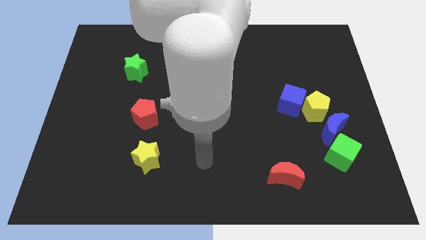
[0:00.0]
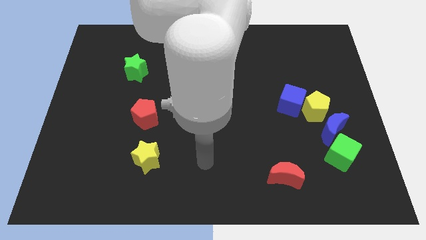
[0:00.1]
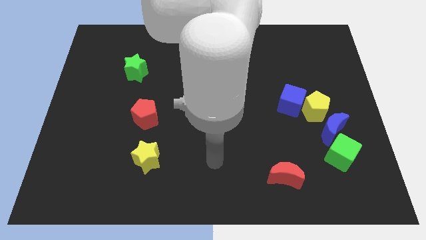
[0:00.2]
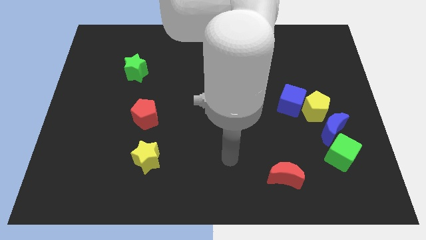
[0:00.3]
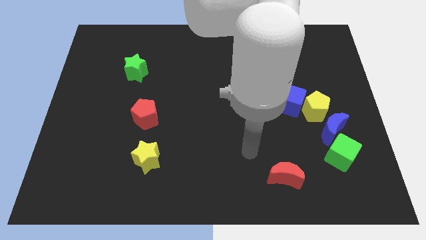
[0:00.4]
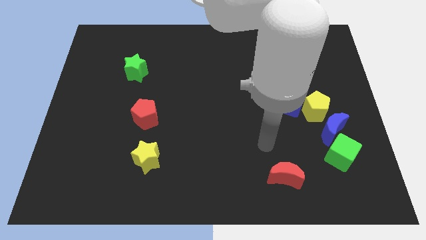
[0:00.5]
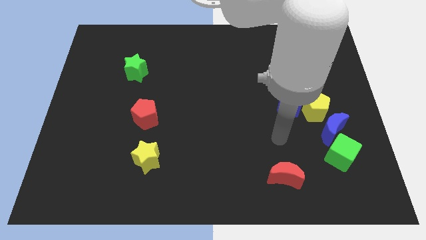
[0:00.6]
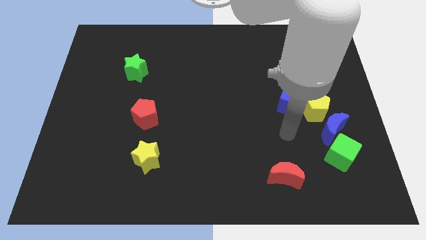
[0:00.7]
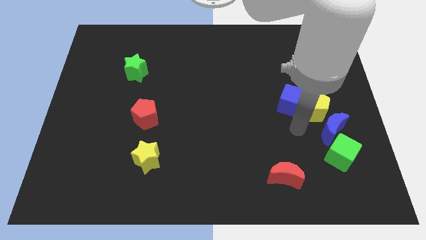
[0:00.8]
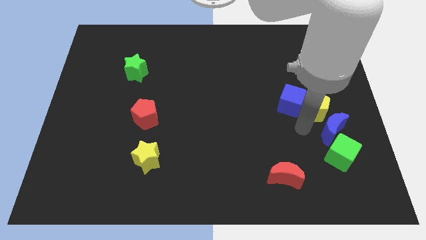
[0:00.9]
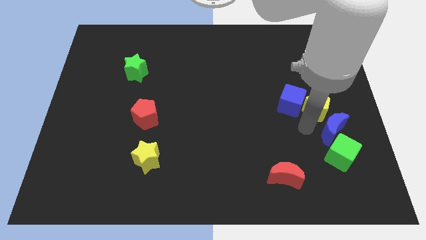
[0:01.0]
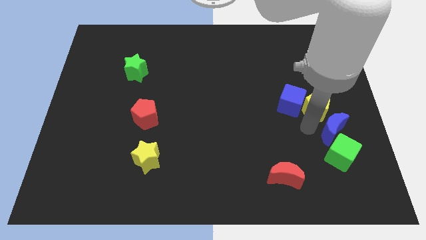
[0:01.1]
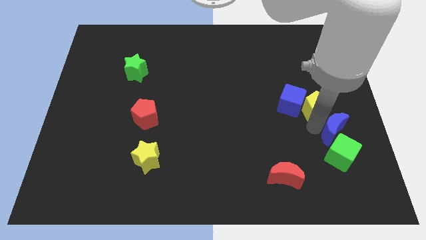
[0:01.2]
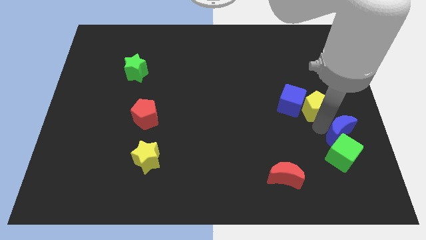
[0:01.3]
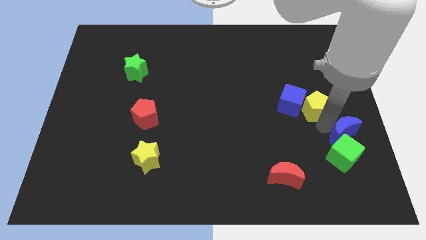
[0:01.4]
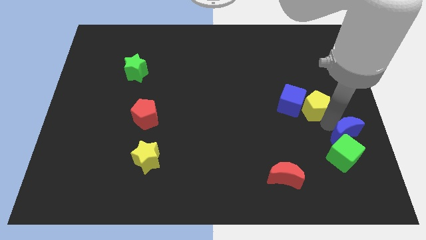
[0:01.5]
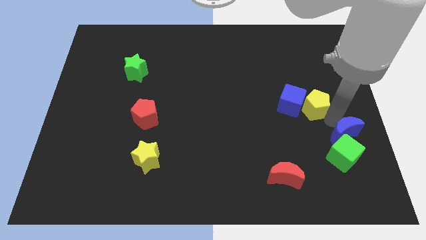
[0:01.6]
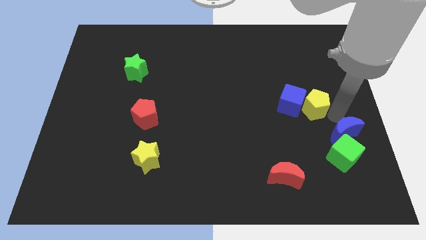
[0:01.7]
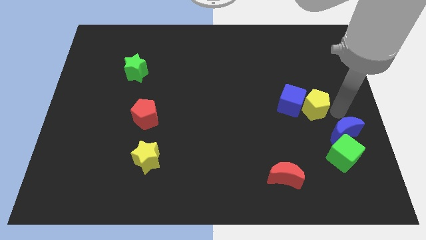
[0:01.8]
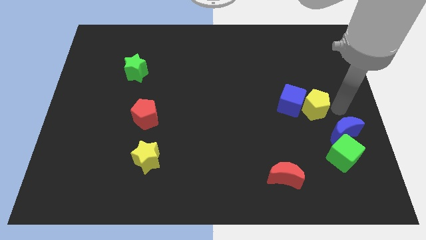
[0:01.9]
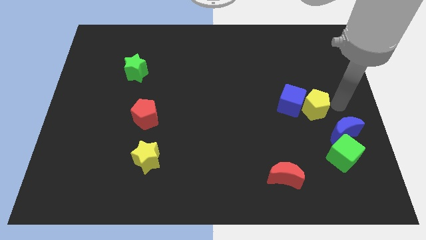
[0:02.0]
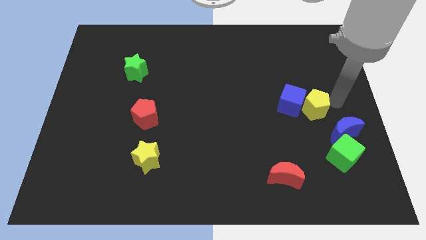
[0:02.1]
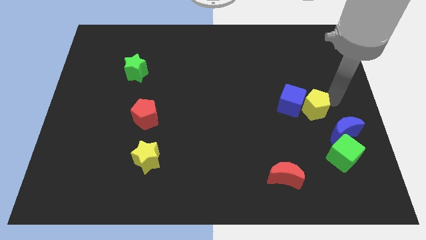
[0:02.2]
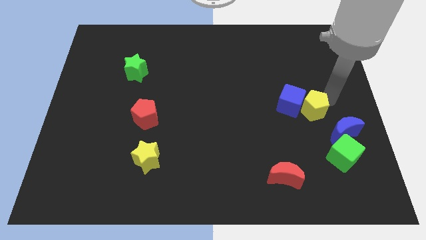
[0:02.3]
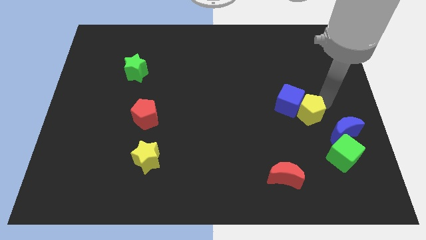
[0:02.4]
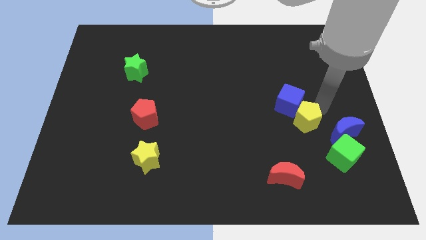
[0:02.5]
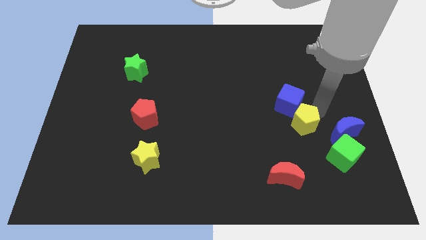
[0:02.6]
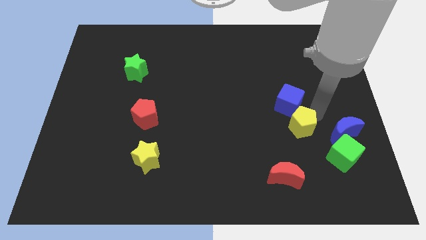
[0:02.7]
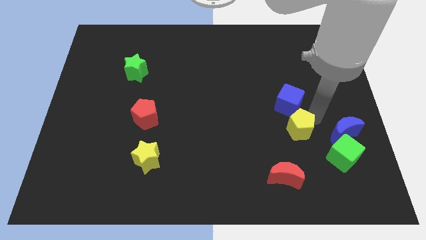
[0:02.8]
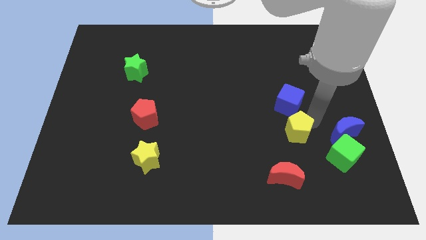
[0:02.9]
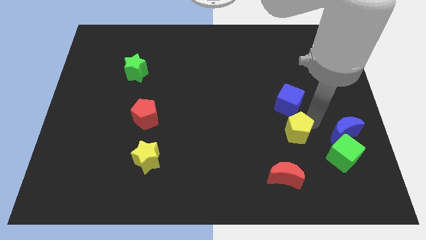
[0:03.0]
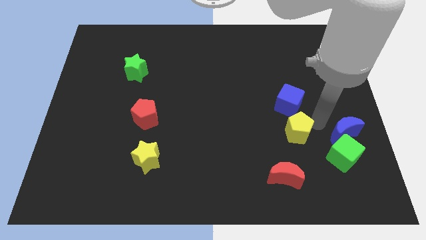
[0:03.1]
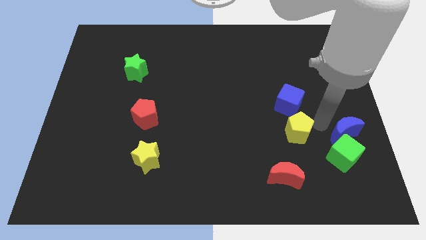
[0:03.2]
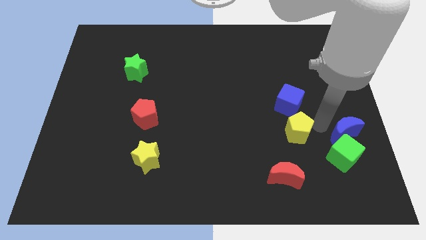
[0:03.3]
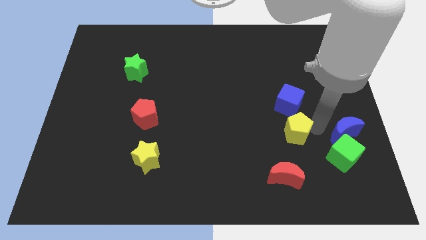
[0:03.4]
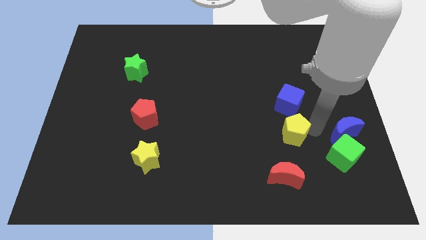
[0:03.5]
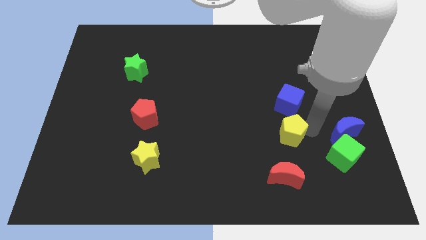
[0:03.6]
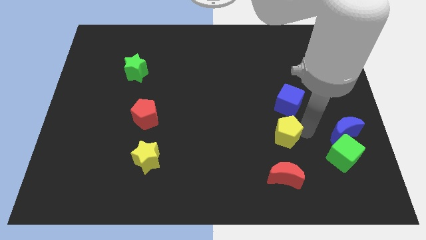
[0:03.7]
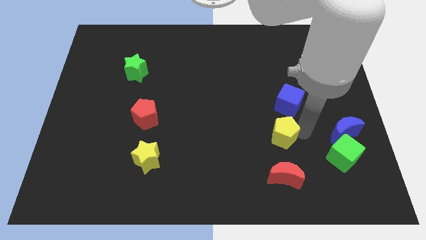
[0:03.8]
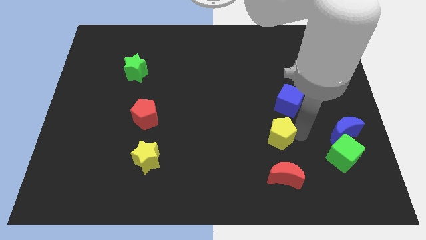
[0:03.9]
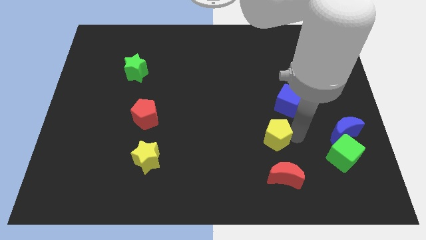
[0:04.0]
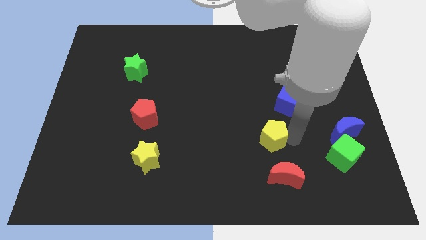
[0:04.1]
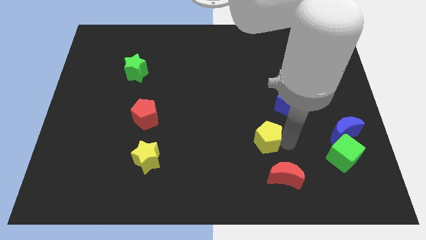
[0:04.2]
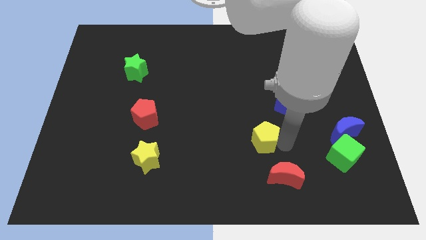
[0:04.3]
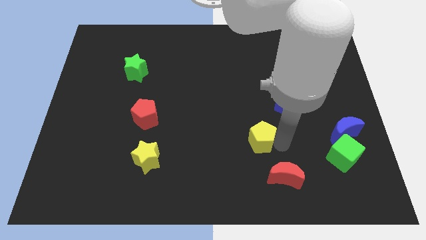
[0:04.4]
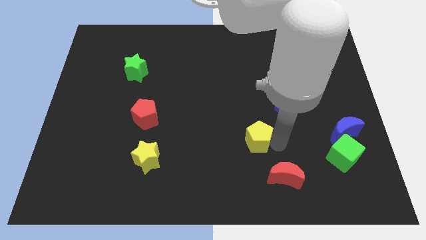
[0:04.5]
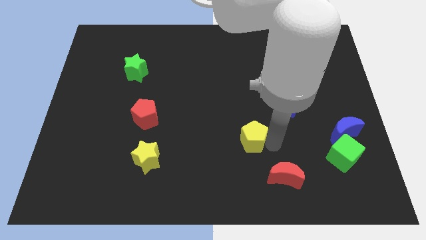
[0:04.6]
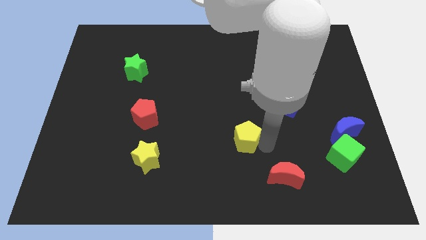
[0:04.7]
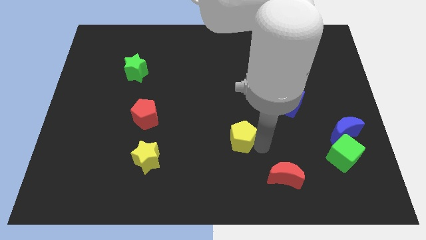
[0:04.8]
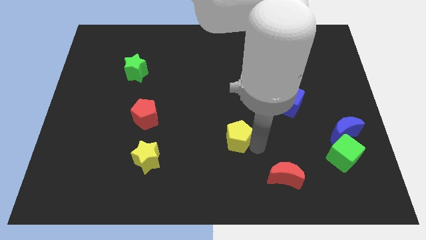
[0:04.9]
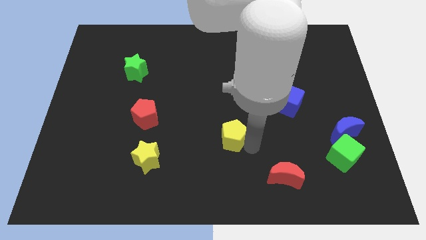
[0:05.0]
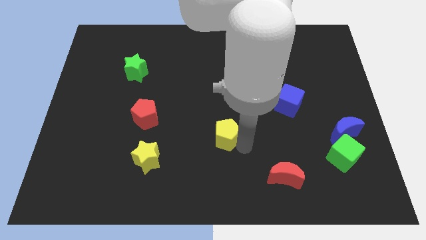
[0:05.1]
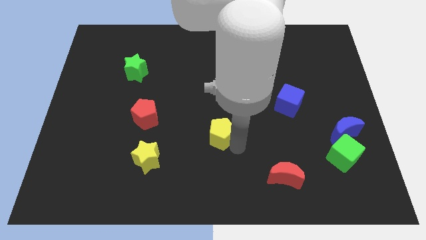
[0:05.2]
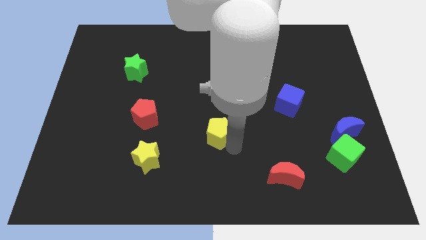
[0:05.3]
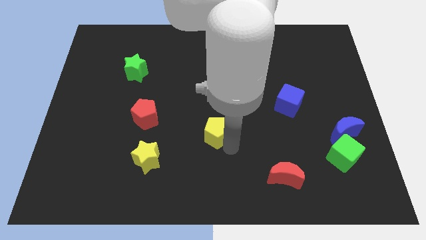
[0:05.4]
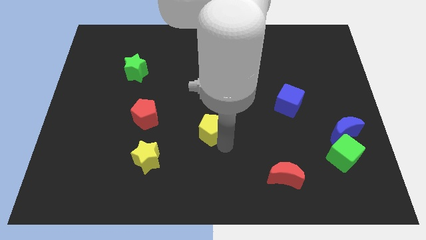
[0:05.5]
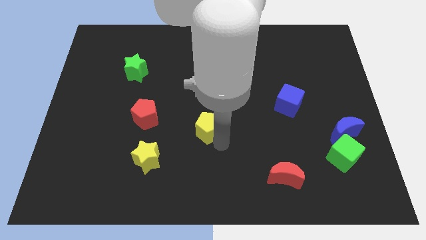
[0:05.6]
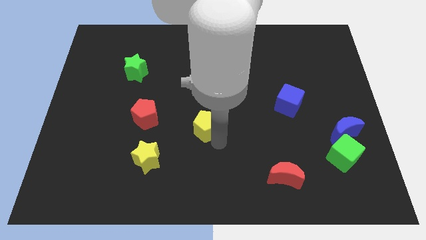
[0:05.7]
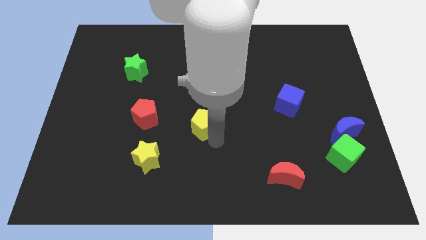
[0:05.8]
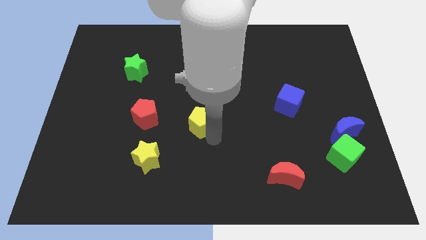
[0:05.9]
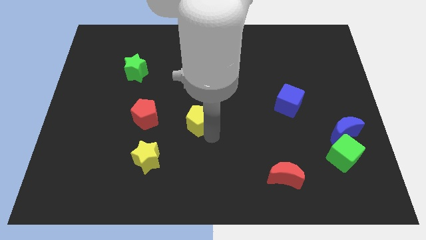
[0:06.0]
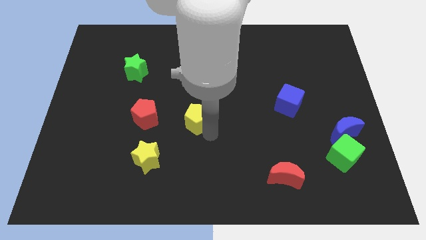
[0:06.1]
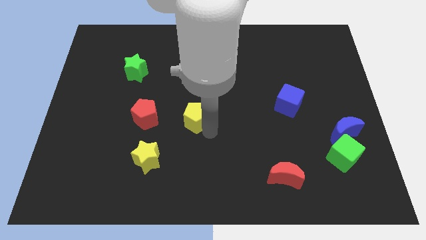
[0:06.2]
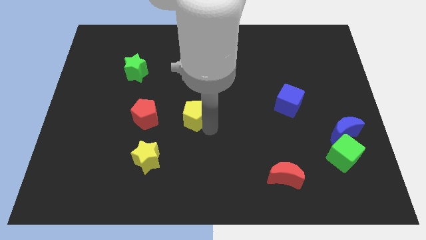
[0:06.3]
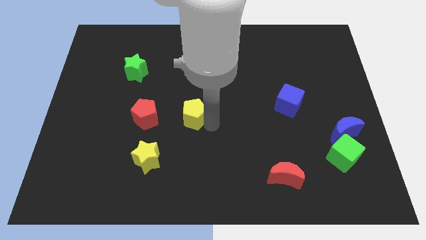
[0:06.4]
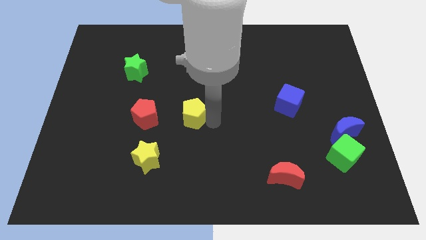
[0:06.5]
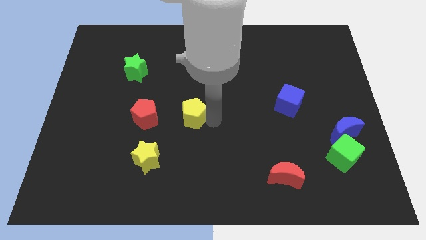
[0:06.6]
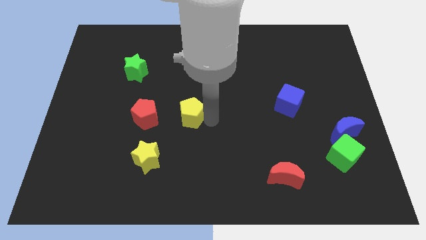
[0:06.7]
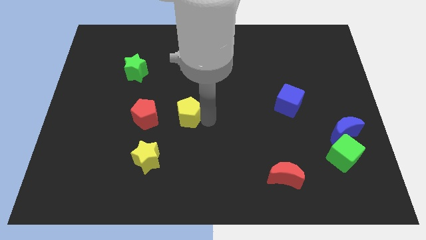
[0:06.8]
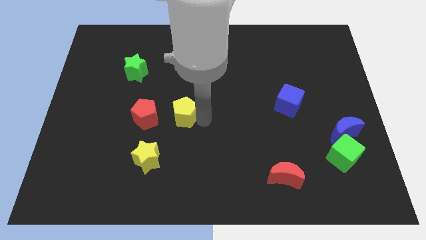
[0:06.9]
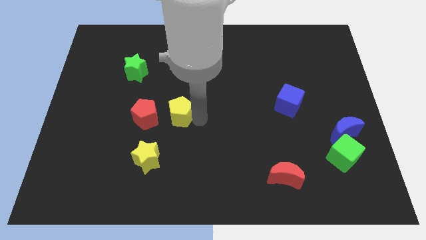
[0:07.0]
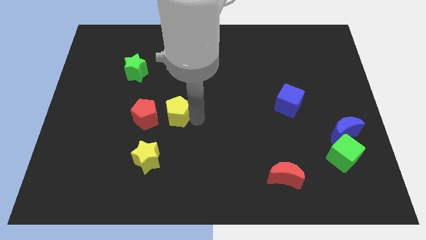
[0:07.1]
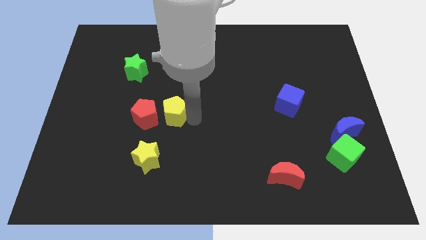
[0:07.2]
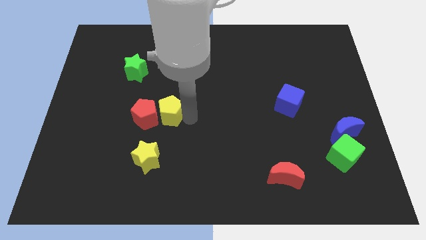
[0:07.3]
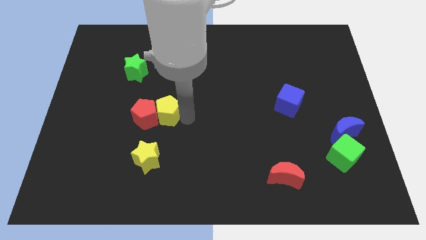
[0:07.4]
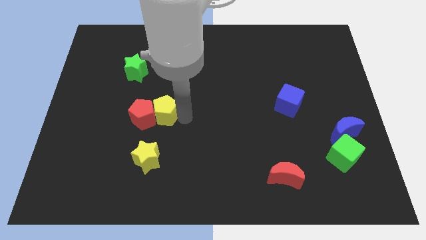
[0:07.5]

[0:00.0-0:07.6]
move the yellow pentagon next to the red pentagon

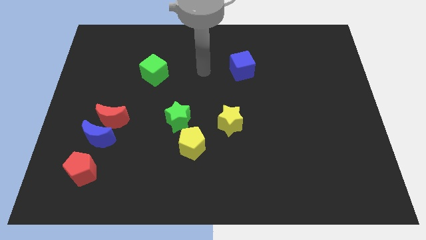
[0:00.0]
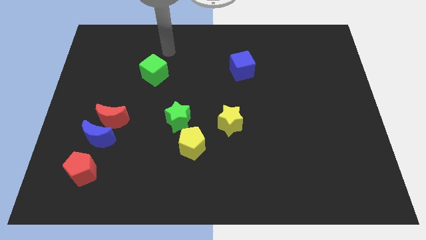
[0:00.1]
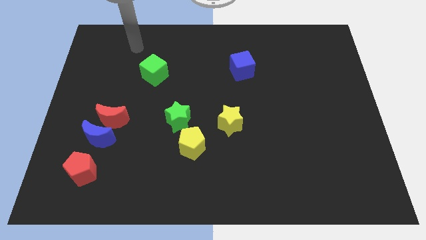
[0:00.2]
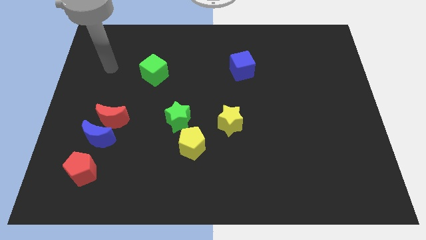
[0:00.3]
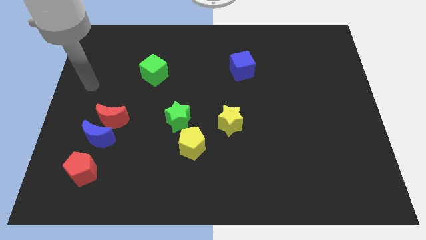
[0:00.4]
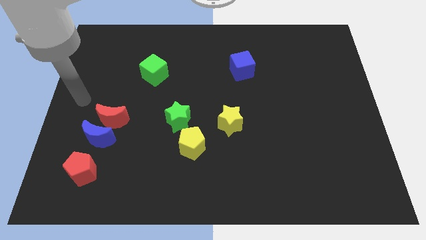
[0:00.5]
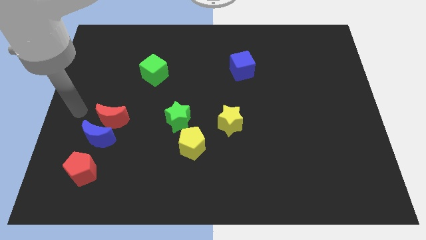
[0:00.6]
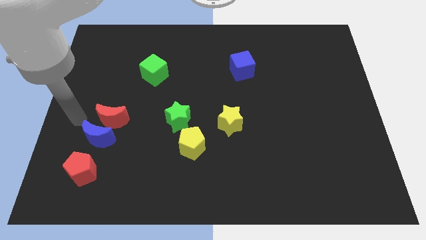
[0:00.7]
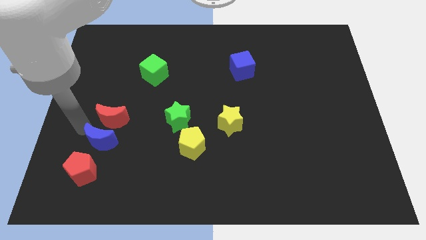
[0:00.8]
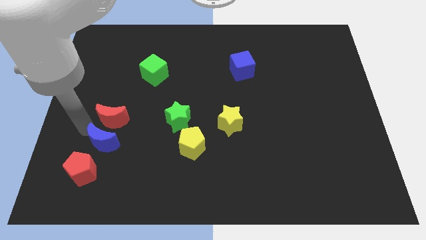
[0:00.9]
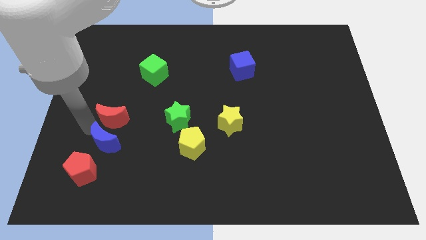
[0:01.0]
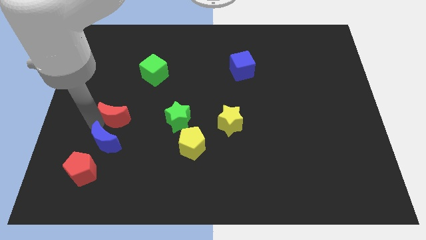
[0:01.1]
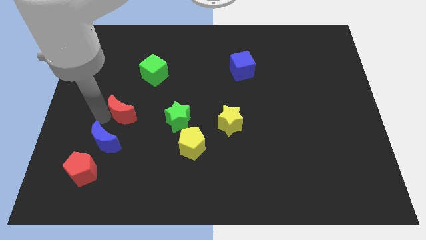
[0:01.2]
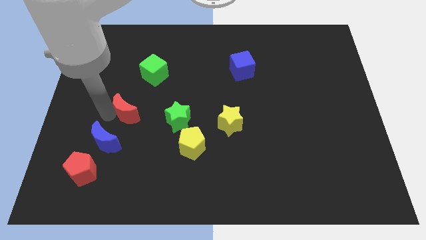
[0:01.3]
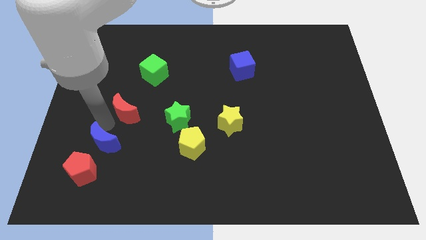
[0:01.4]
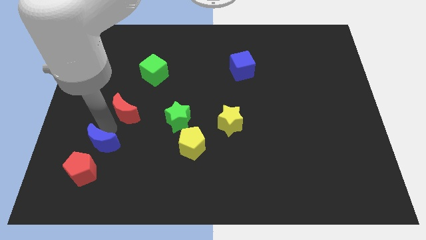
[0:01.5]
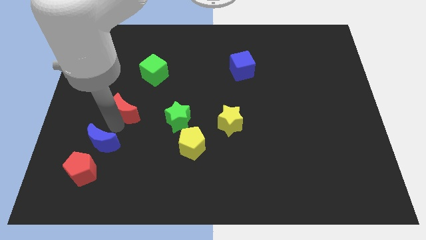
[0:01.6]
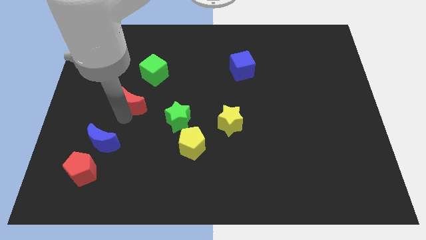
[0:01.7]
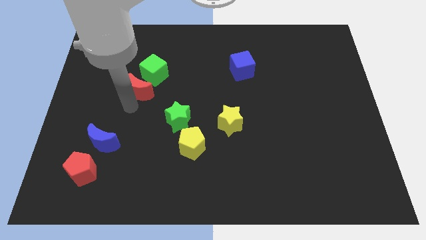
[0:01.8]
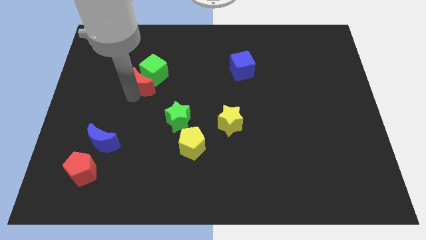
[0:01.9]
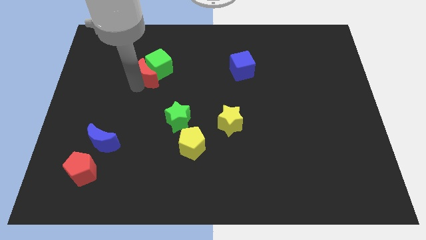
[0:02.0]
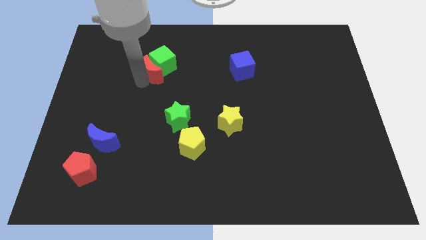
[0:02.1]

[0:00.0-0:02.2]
move the red moon towards the green cube
